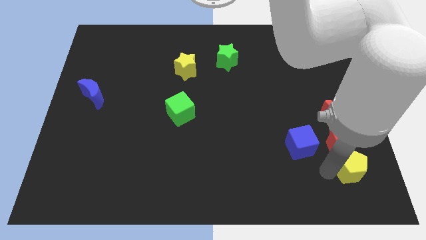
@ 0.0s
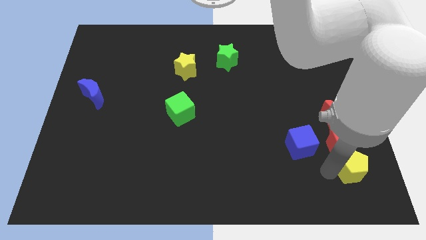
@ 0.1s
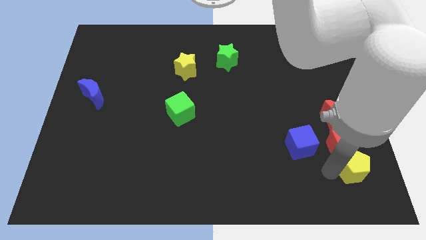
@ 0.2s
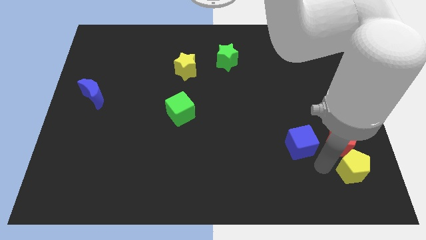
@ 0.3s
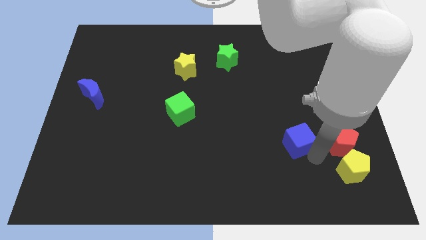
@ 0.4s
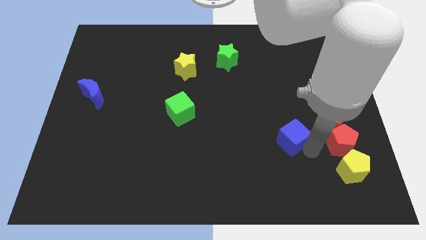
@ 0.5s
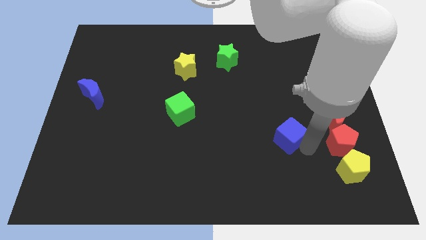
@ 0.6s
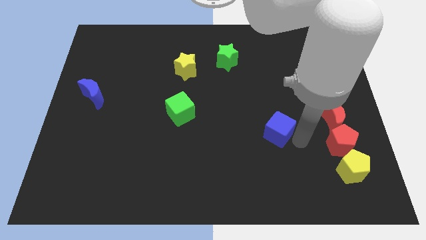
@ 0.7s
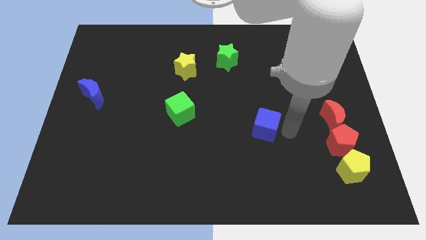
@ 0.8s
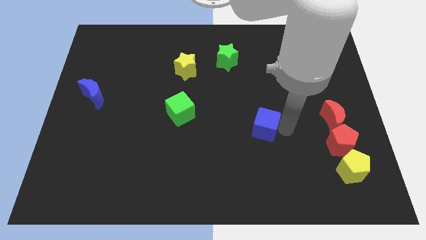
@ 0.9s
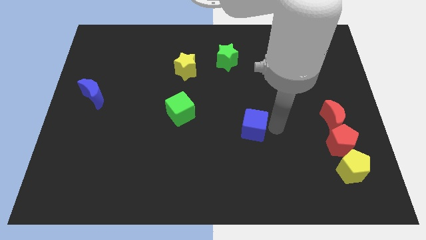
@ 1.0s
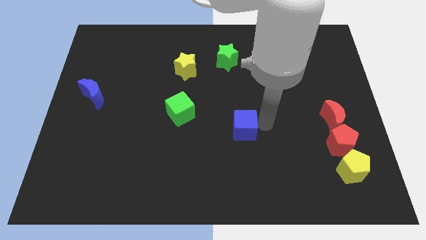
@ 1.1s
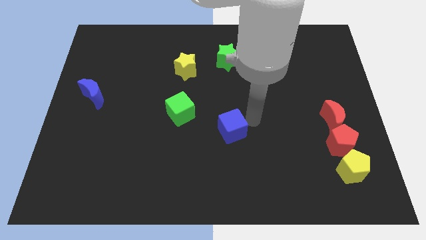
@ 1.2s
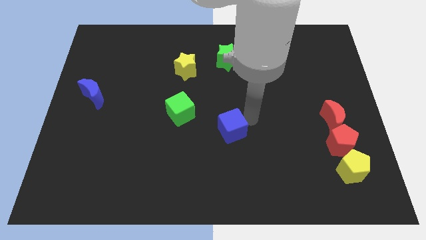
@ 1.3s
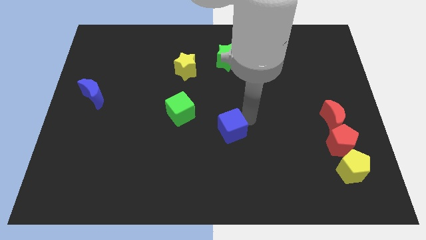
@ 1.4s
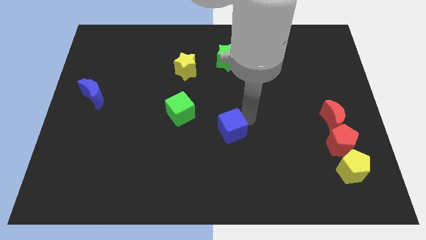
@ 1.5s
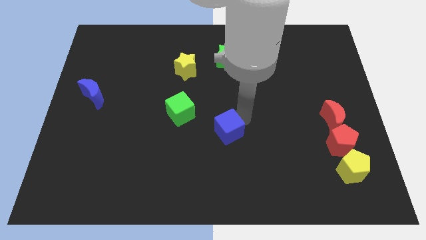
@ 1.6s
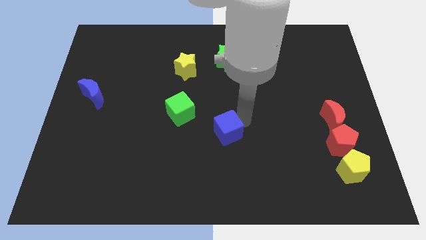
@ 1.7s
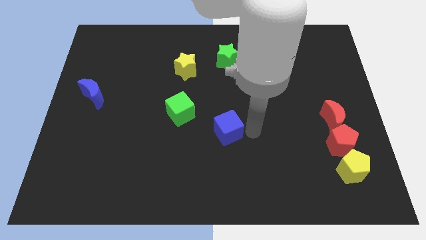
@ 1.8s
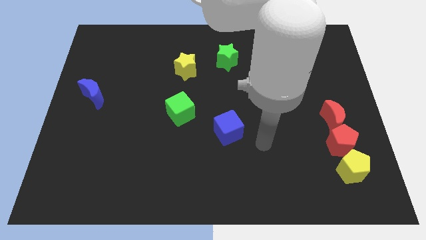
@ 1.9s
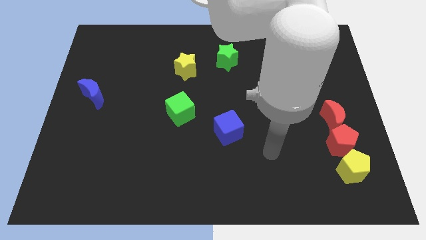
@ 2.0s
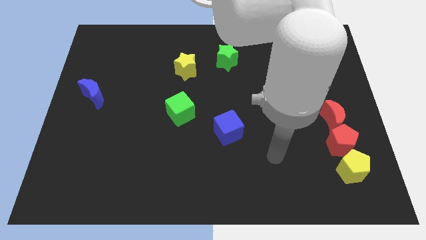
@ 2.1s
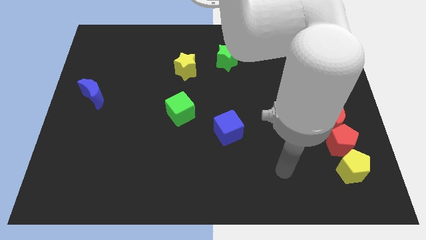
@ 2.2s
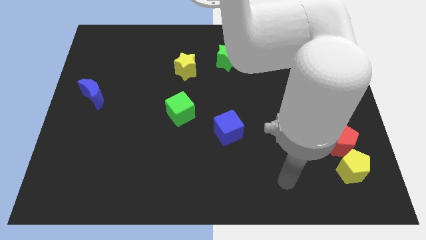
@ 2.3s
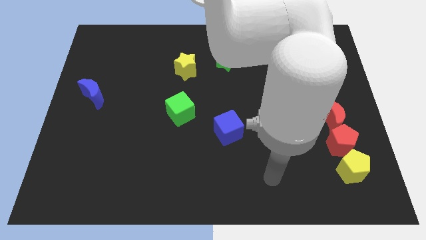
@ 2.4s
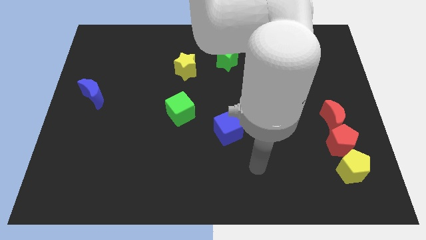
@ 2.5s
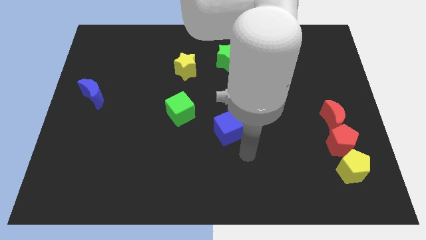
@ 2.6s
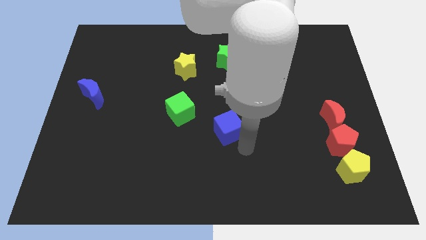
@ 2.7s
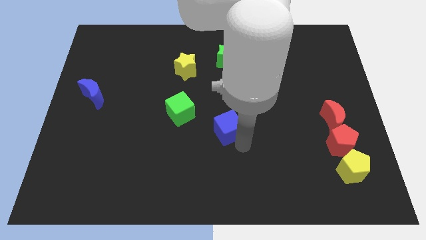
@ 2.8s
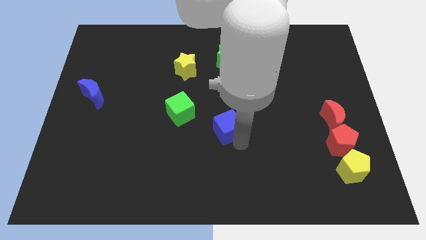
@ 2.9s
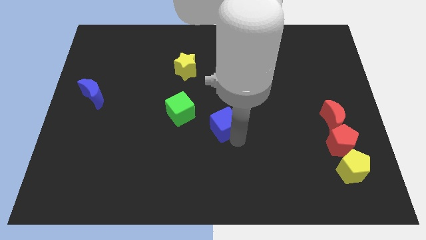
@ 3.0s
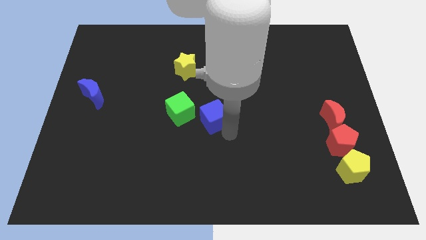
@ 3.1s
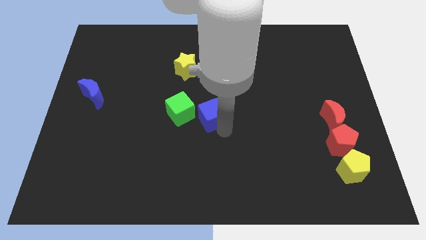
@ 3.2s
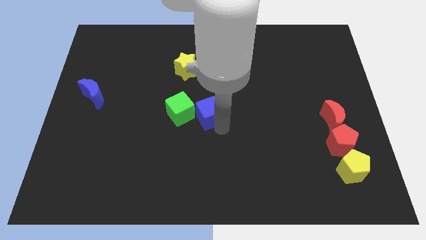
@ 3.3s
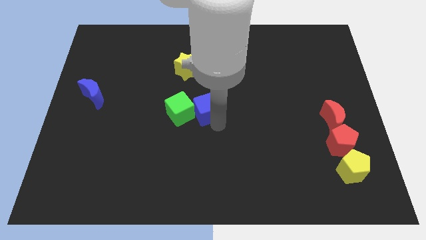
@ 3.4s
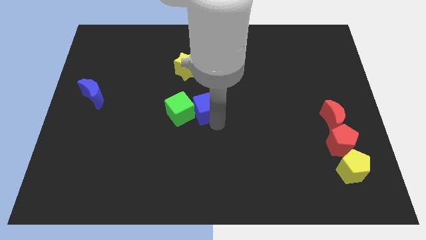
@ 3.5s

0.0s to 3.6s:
push the blue cube into green cube

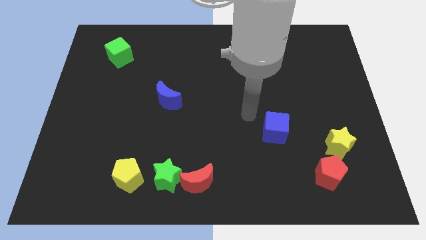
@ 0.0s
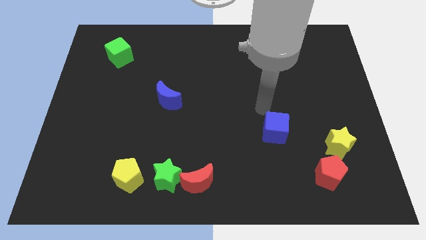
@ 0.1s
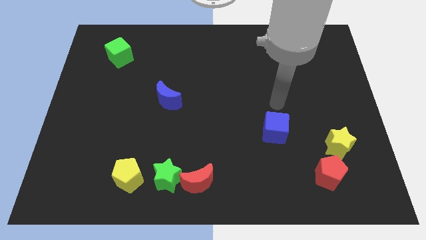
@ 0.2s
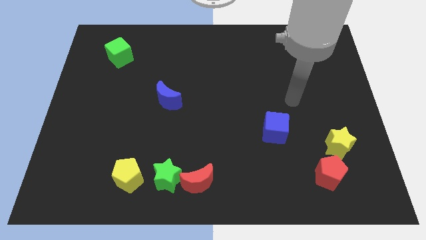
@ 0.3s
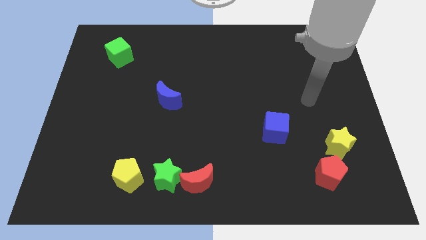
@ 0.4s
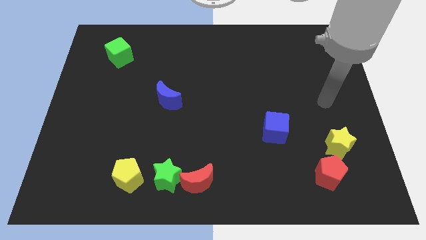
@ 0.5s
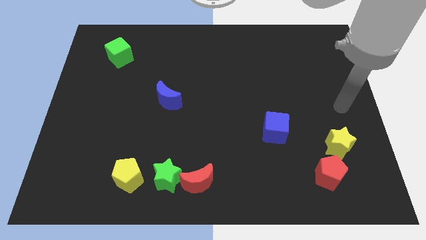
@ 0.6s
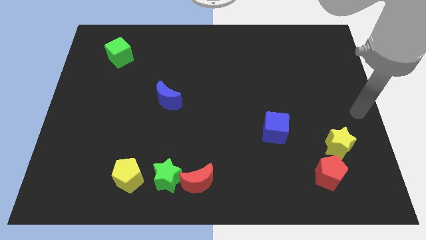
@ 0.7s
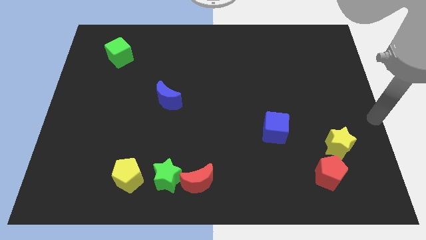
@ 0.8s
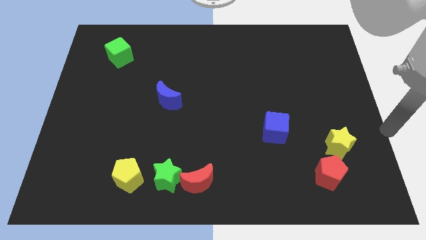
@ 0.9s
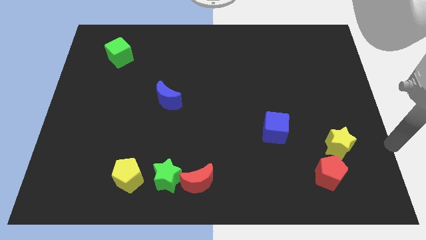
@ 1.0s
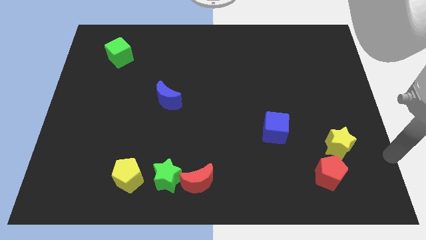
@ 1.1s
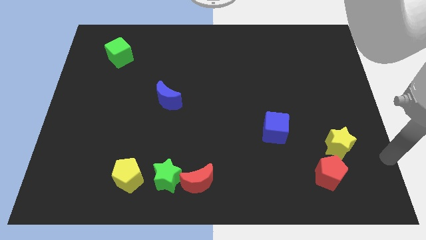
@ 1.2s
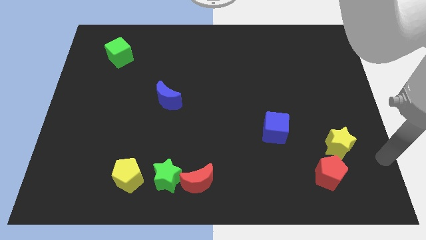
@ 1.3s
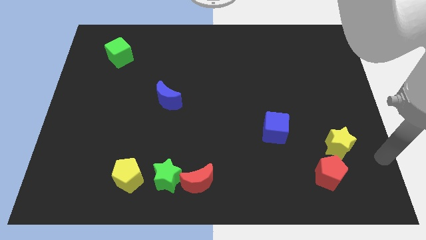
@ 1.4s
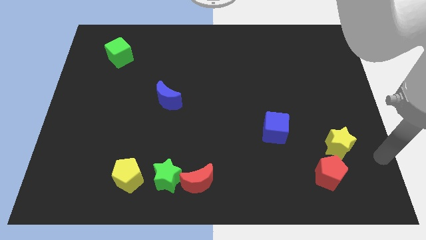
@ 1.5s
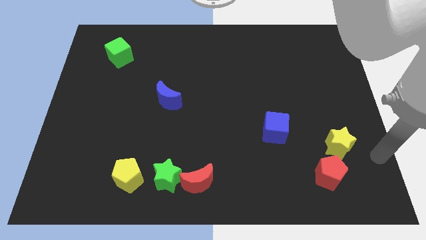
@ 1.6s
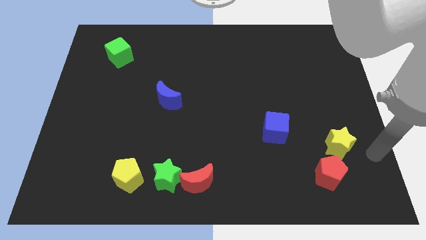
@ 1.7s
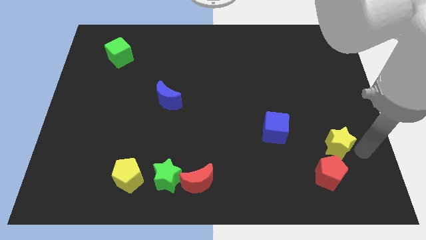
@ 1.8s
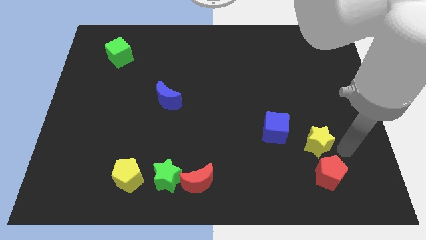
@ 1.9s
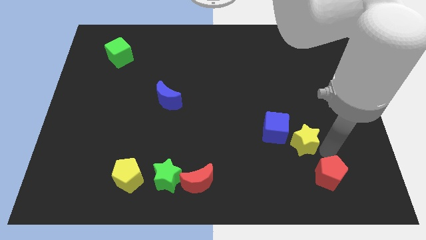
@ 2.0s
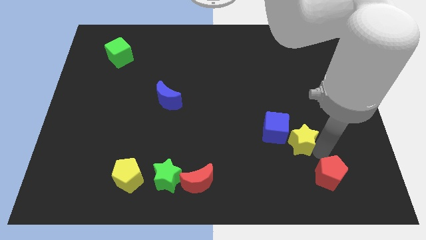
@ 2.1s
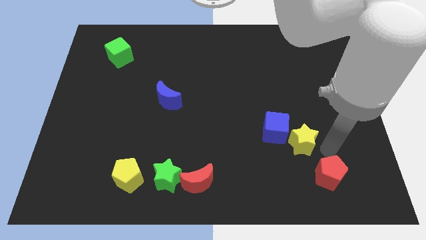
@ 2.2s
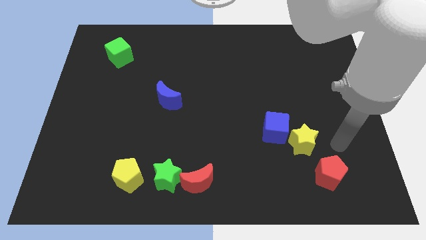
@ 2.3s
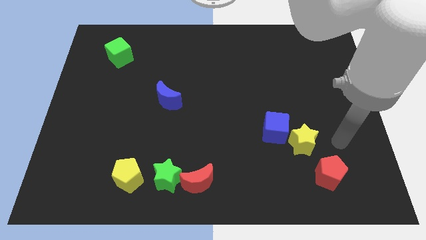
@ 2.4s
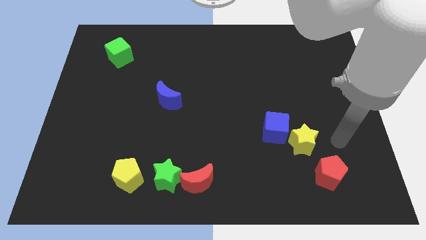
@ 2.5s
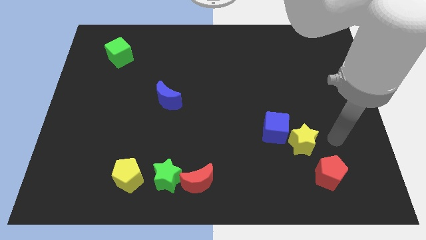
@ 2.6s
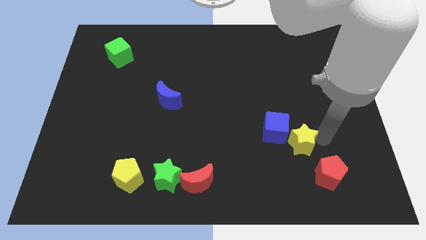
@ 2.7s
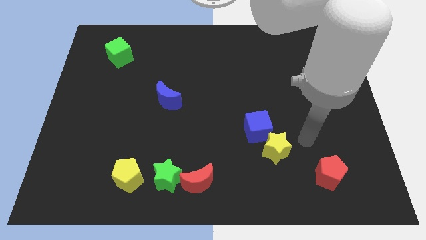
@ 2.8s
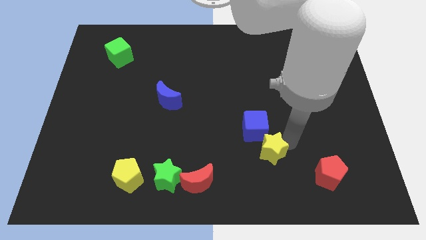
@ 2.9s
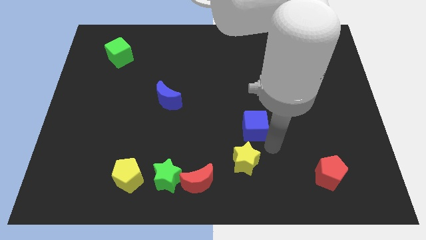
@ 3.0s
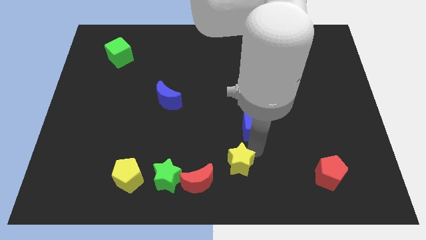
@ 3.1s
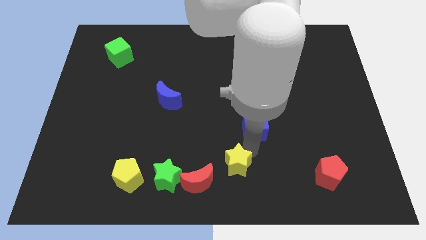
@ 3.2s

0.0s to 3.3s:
push the yellow star and blue cube to the left side of the board

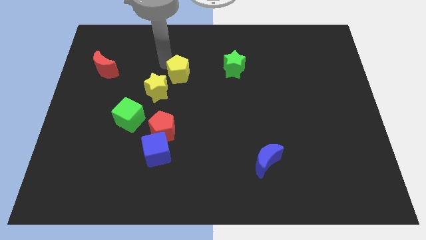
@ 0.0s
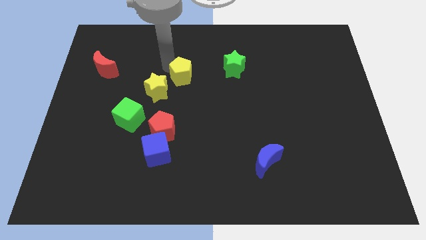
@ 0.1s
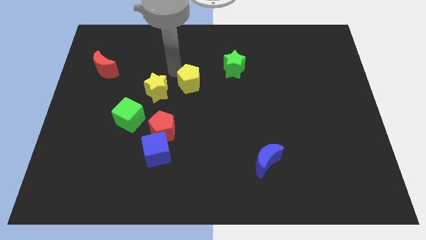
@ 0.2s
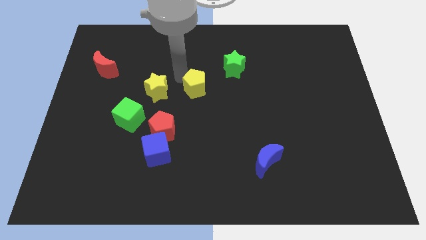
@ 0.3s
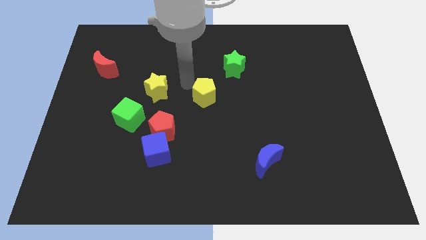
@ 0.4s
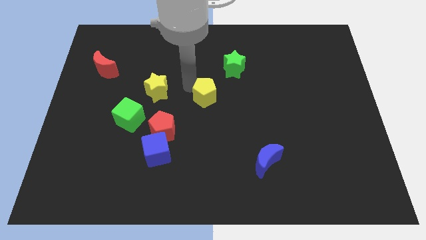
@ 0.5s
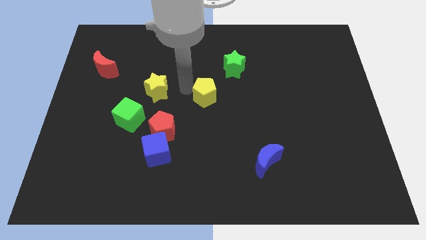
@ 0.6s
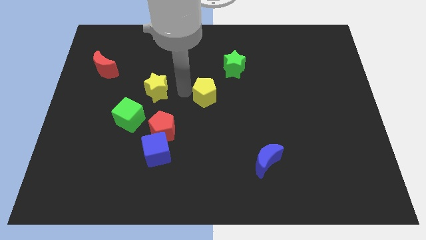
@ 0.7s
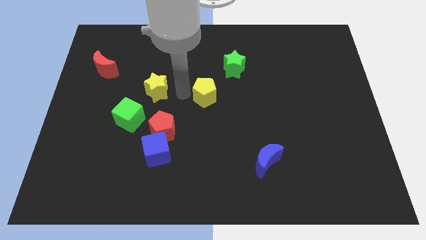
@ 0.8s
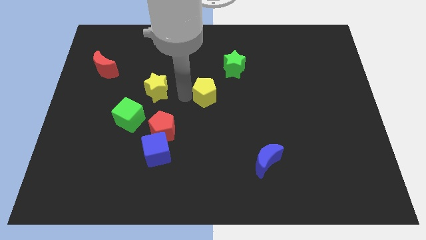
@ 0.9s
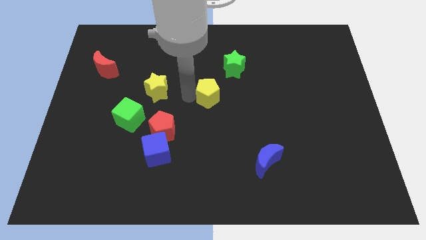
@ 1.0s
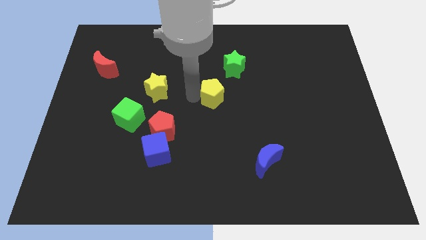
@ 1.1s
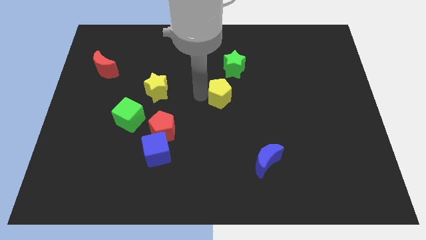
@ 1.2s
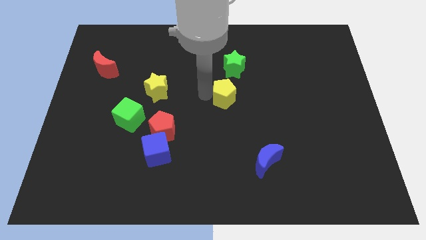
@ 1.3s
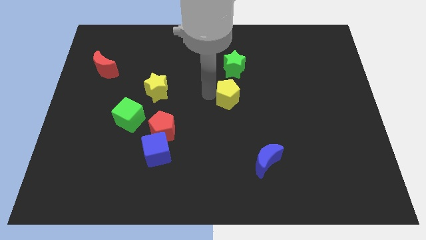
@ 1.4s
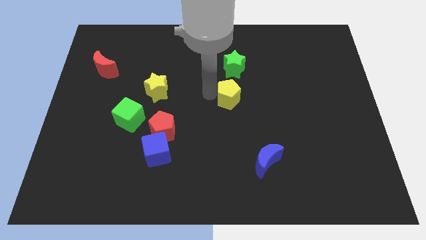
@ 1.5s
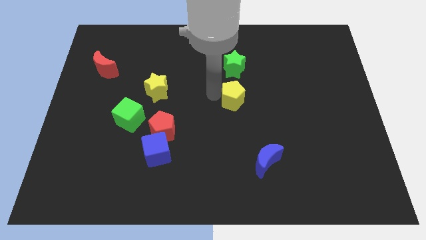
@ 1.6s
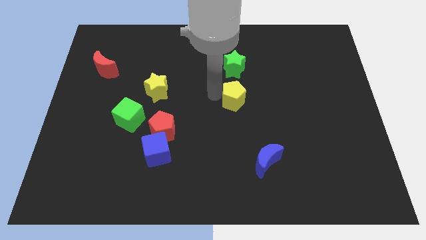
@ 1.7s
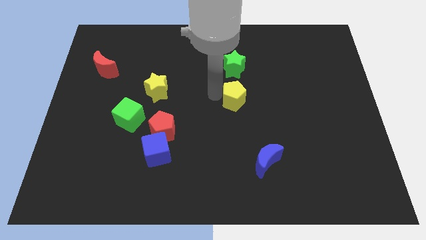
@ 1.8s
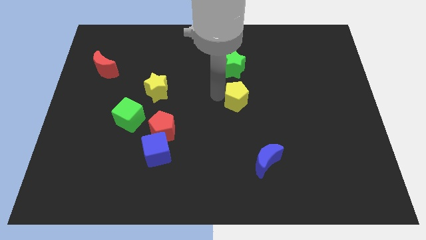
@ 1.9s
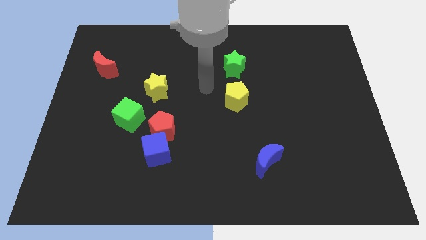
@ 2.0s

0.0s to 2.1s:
place the yellow pentagon to the bottom of the green star
